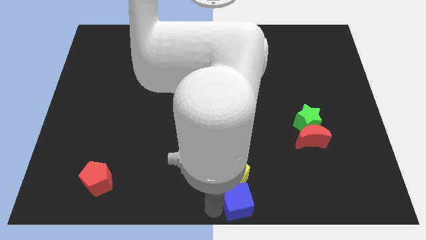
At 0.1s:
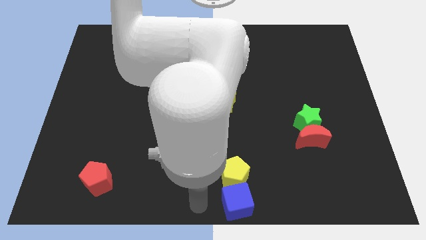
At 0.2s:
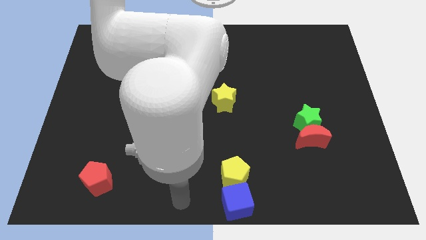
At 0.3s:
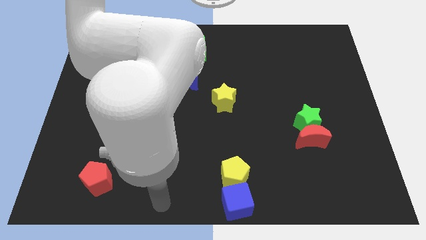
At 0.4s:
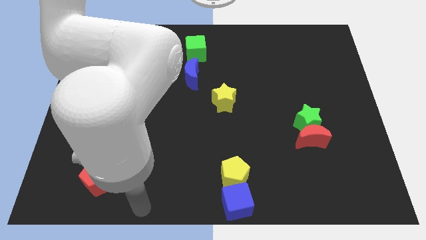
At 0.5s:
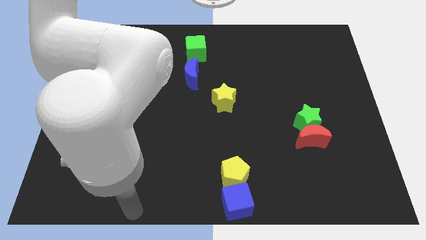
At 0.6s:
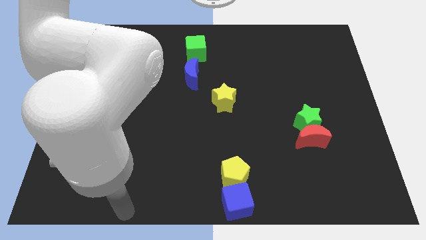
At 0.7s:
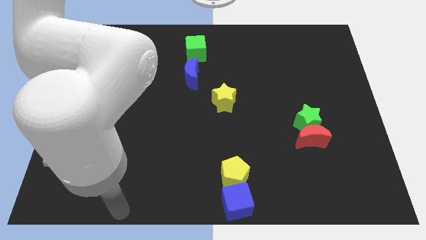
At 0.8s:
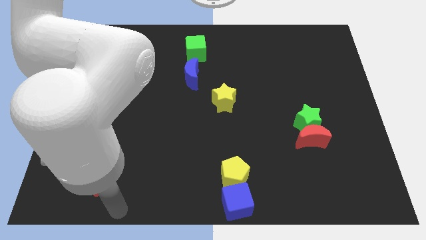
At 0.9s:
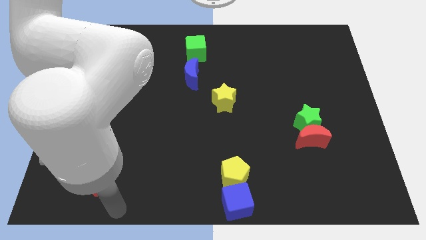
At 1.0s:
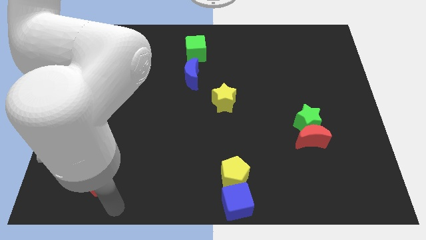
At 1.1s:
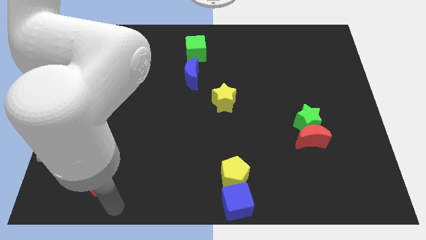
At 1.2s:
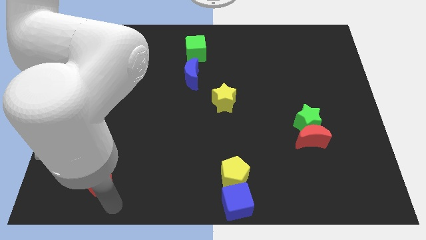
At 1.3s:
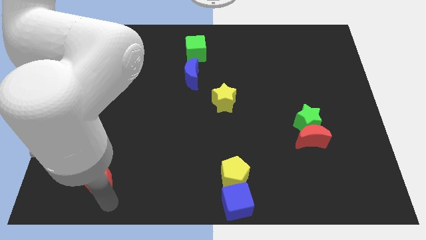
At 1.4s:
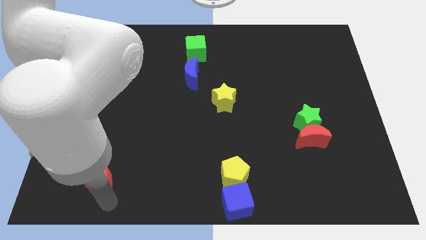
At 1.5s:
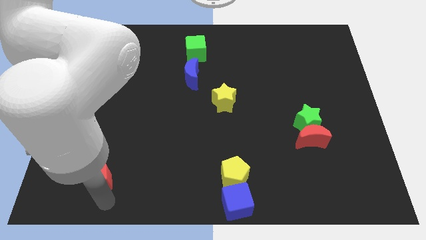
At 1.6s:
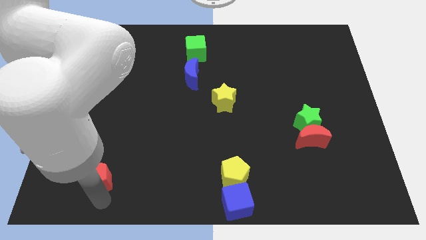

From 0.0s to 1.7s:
point your arm at the bottom of the red pentagon

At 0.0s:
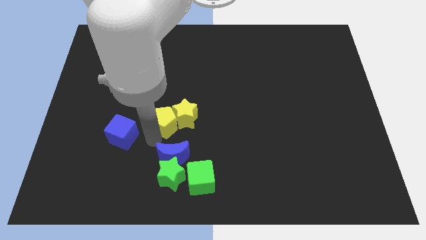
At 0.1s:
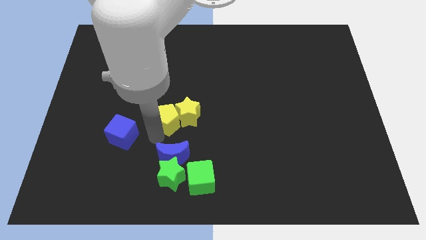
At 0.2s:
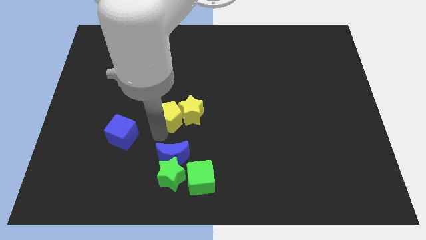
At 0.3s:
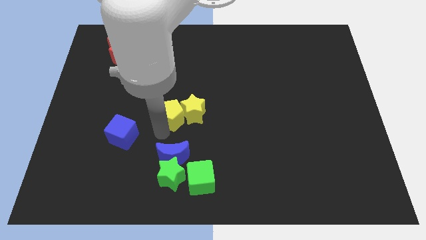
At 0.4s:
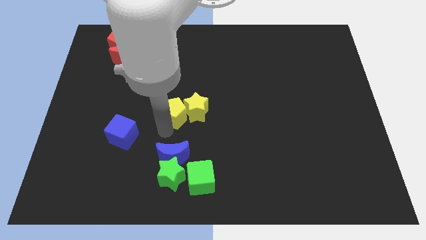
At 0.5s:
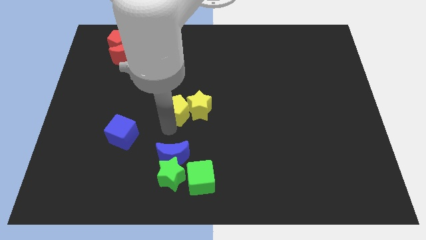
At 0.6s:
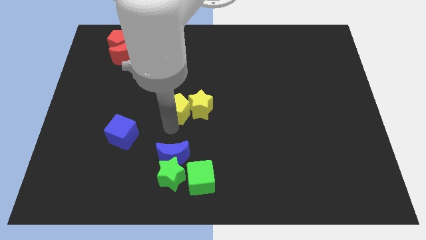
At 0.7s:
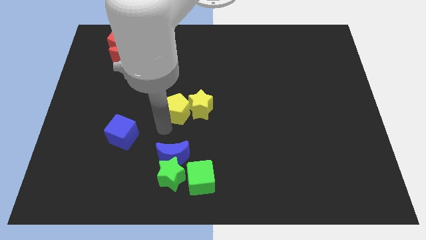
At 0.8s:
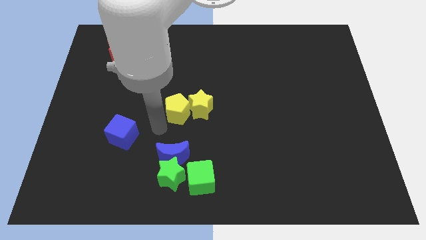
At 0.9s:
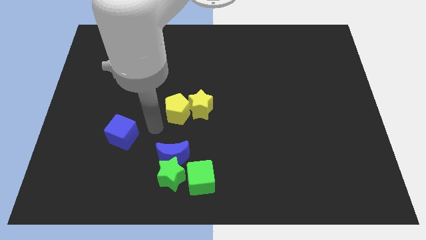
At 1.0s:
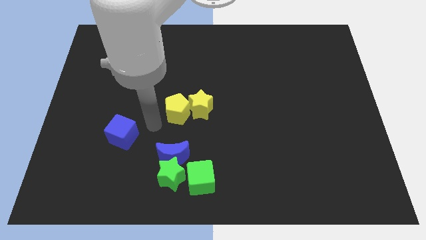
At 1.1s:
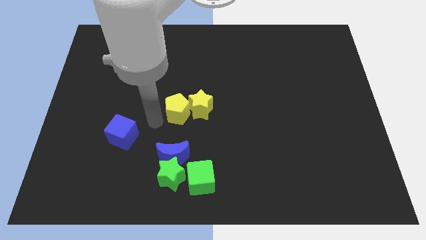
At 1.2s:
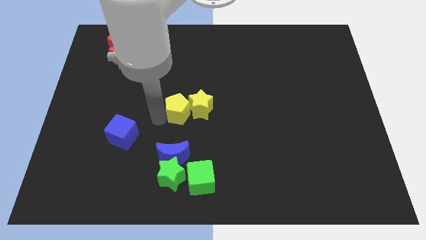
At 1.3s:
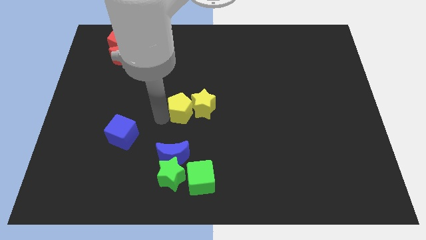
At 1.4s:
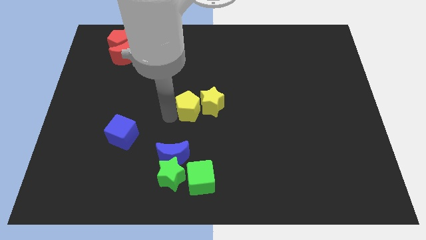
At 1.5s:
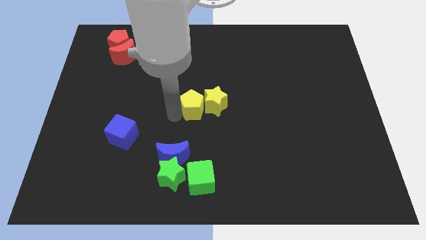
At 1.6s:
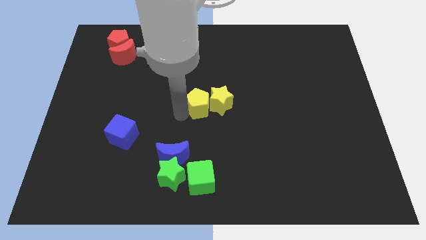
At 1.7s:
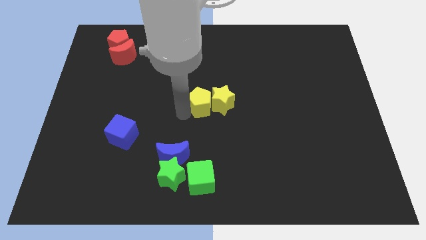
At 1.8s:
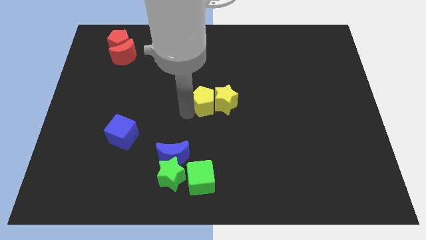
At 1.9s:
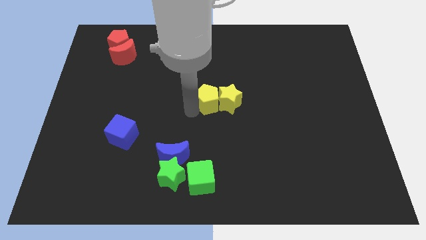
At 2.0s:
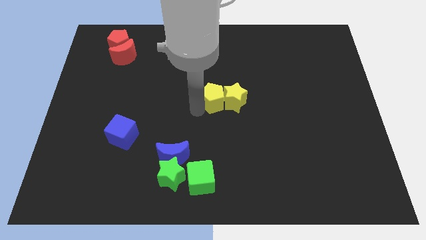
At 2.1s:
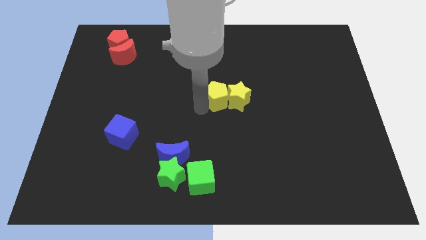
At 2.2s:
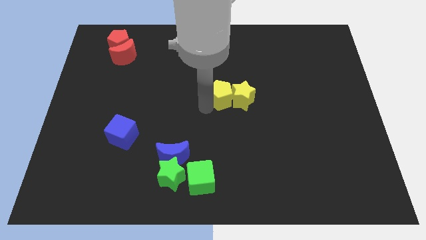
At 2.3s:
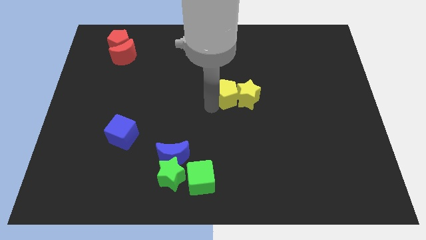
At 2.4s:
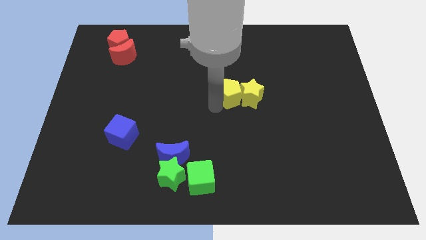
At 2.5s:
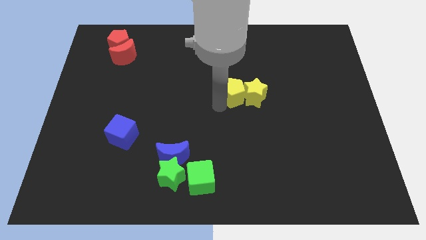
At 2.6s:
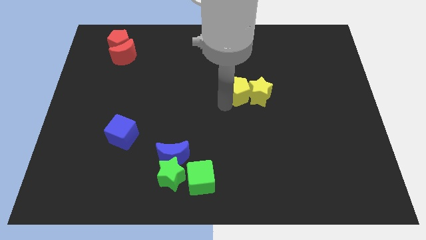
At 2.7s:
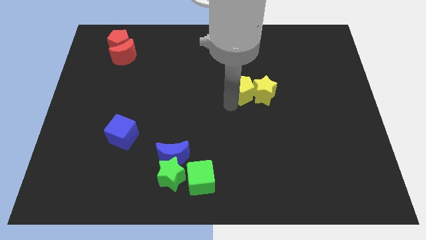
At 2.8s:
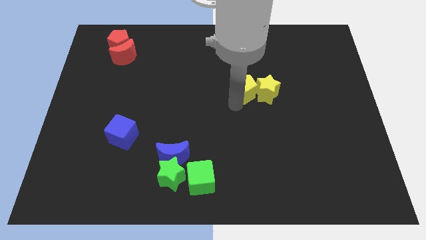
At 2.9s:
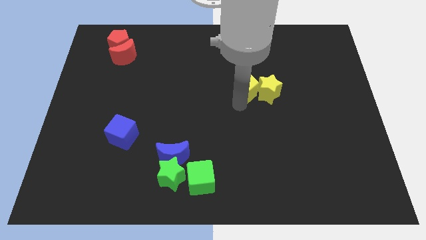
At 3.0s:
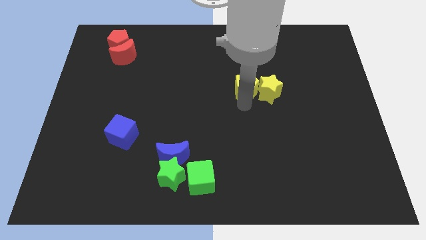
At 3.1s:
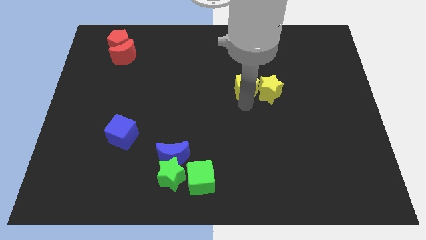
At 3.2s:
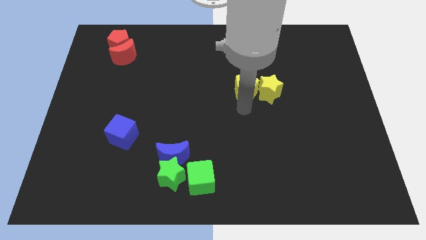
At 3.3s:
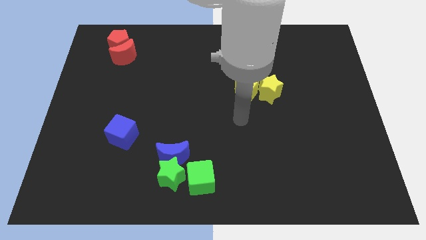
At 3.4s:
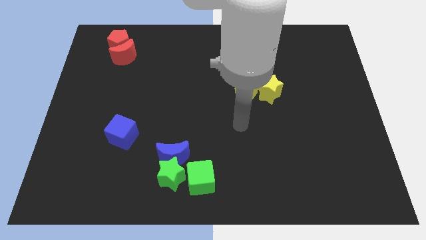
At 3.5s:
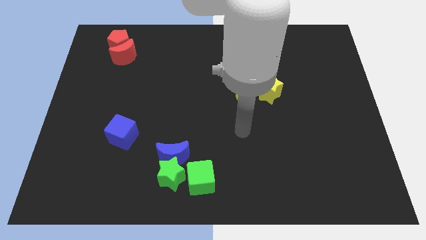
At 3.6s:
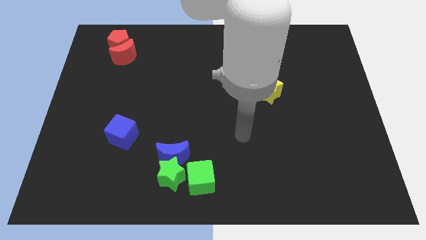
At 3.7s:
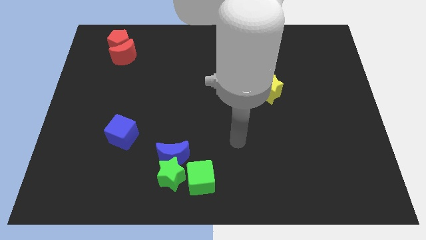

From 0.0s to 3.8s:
move both the yellow blocks slightly to the right side of the board

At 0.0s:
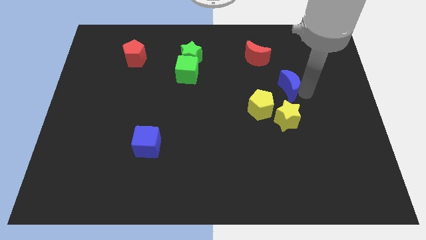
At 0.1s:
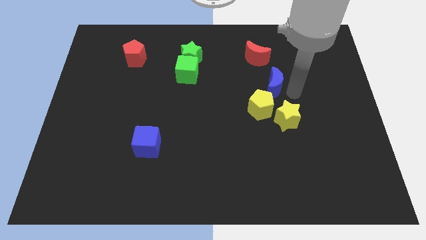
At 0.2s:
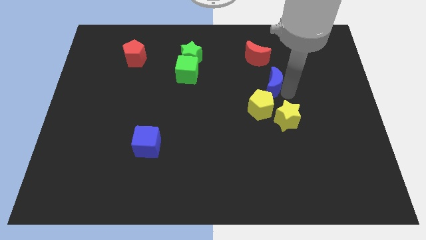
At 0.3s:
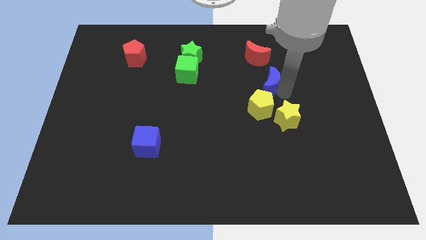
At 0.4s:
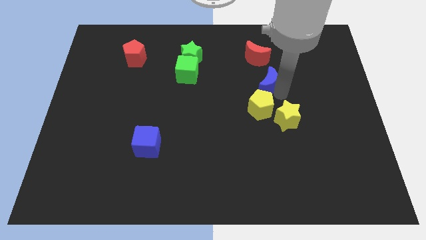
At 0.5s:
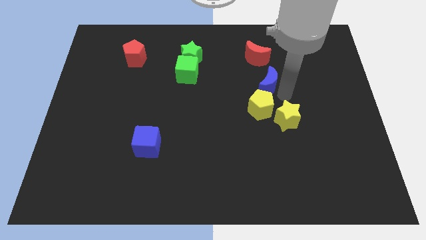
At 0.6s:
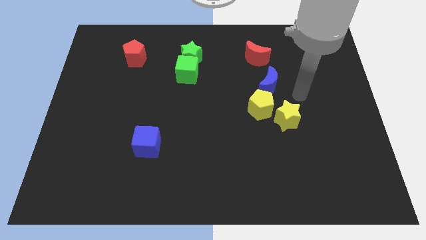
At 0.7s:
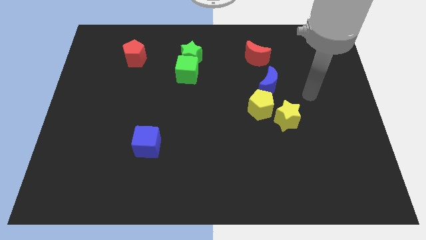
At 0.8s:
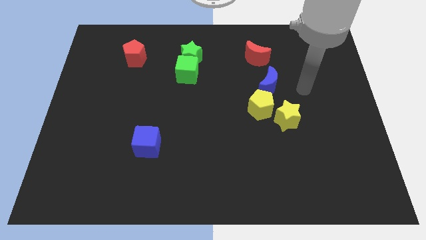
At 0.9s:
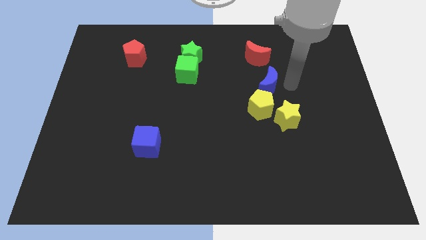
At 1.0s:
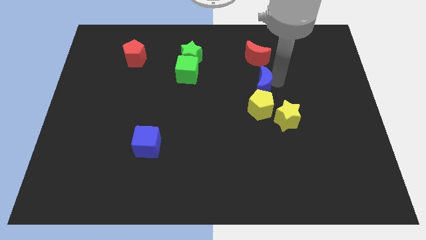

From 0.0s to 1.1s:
push blue crescent in between red moon and yellow pentagon

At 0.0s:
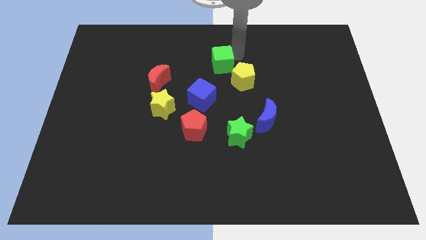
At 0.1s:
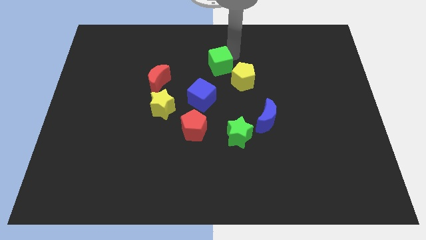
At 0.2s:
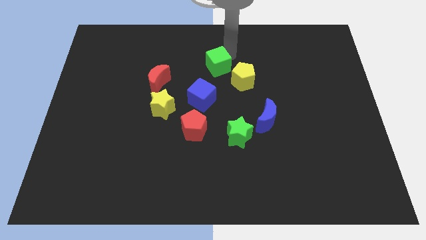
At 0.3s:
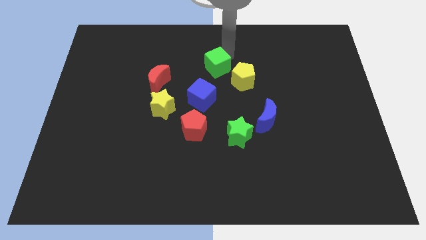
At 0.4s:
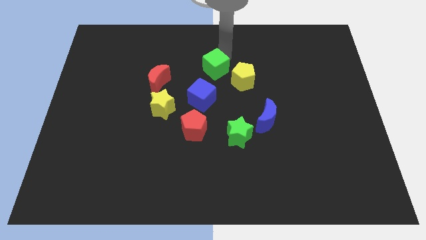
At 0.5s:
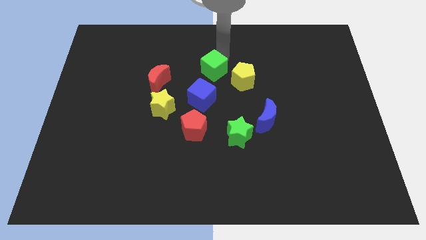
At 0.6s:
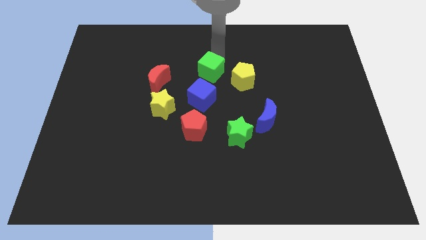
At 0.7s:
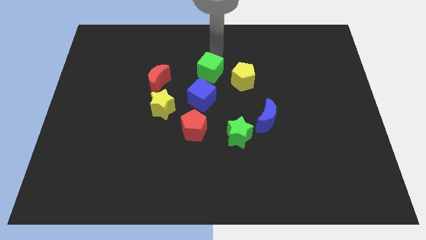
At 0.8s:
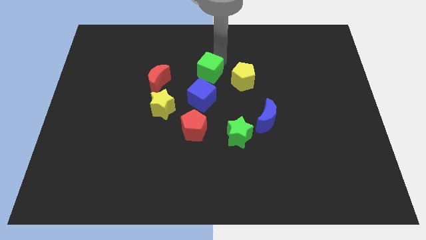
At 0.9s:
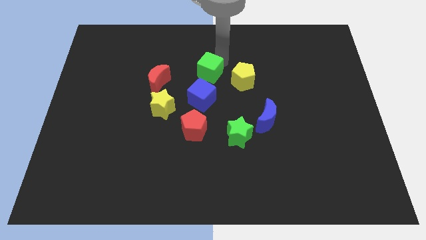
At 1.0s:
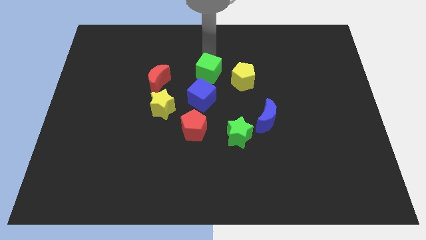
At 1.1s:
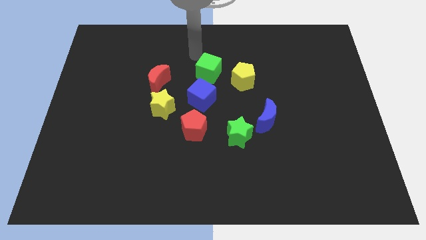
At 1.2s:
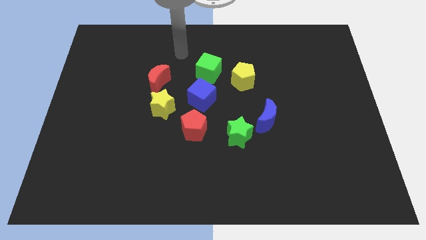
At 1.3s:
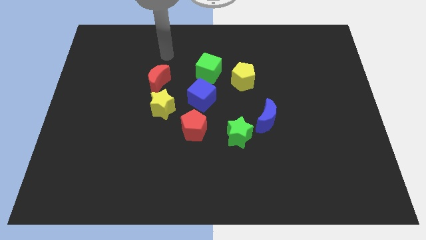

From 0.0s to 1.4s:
place the green cube above the blue cube

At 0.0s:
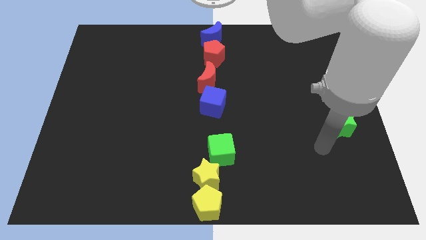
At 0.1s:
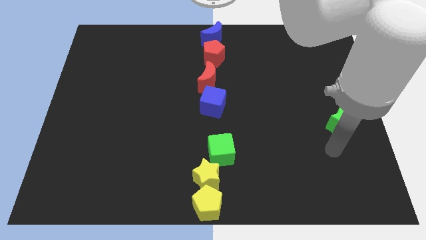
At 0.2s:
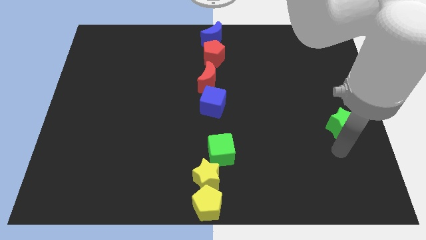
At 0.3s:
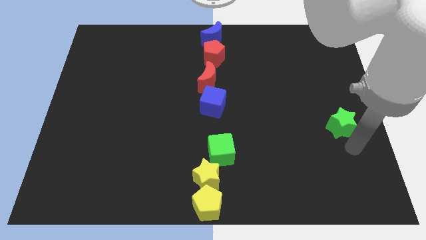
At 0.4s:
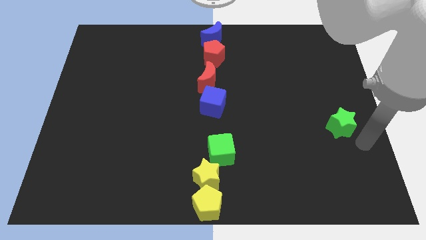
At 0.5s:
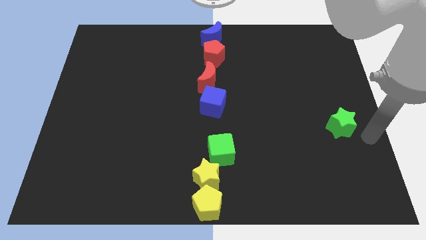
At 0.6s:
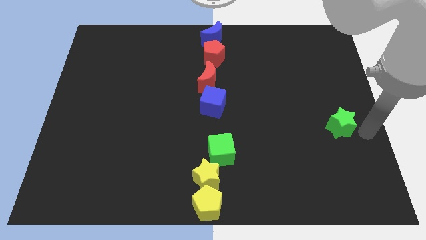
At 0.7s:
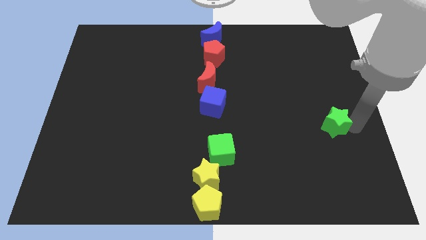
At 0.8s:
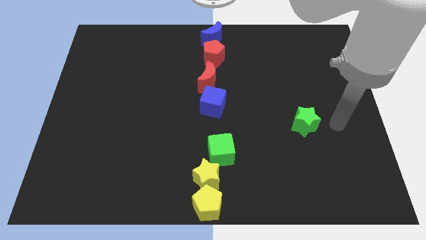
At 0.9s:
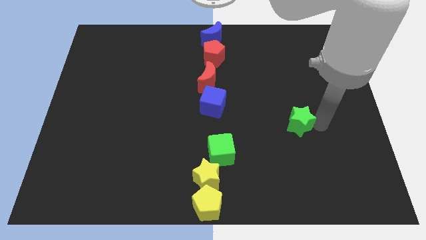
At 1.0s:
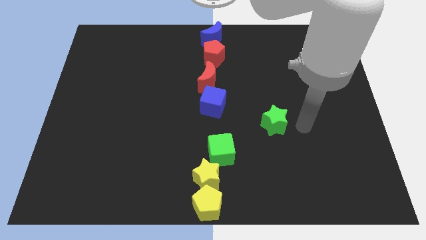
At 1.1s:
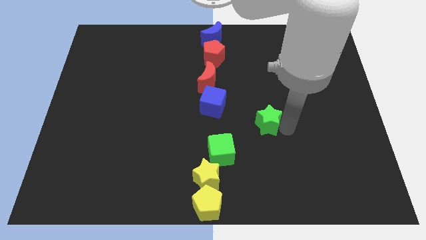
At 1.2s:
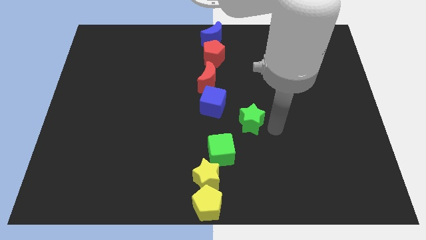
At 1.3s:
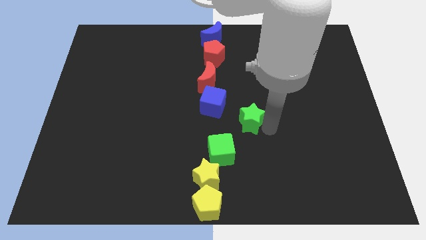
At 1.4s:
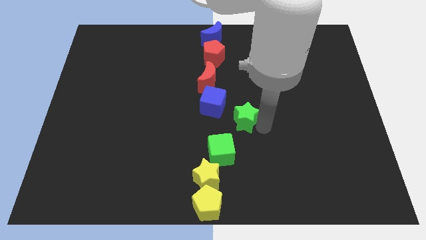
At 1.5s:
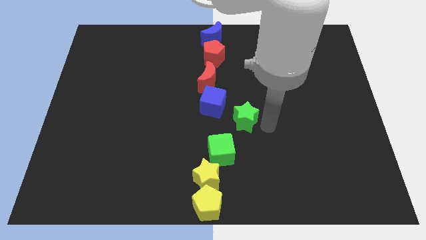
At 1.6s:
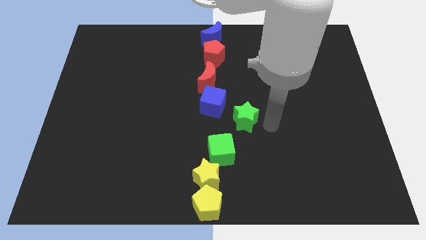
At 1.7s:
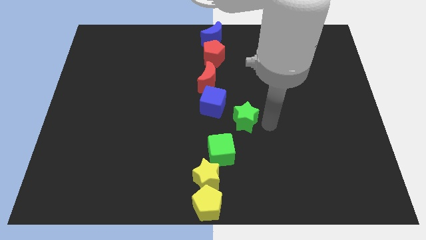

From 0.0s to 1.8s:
push the green star towards the center of the board
